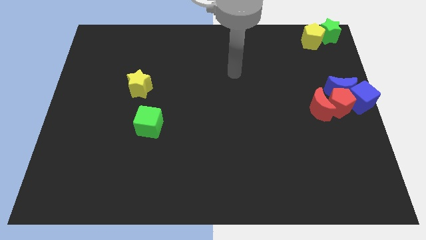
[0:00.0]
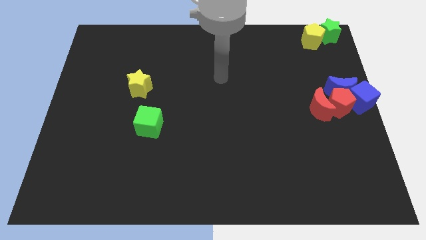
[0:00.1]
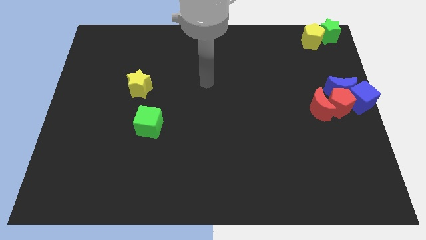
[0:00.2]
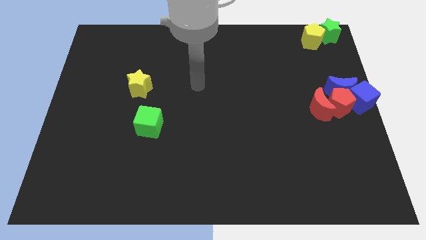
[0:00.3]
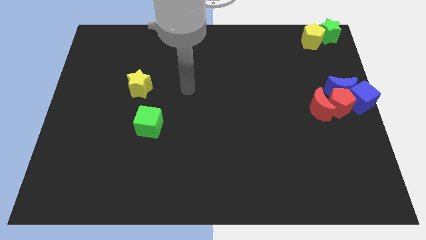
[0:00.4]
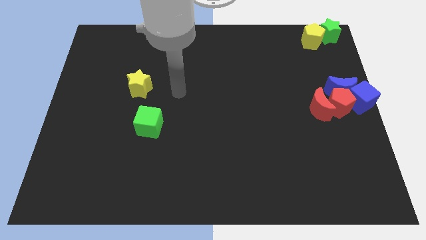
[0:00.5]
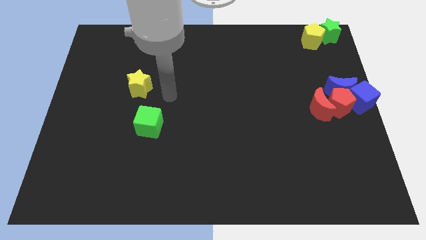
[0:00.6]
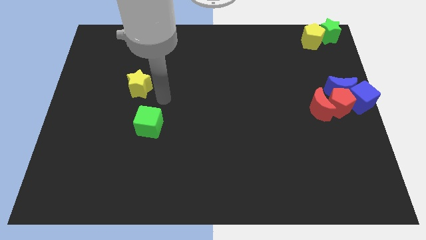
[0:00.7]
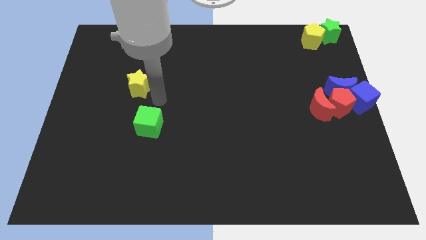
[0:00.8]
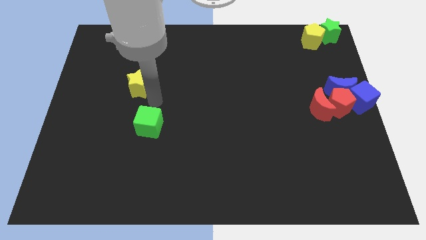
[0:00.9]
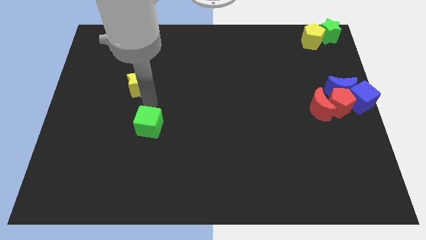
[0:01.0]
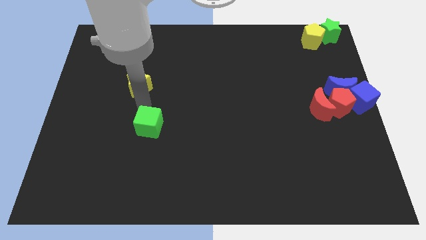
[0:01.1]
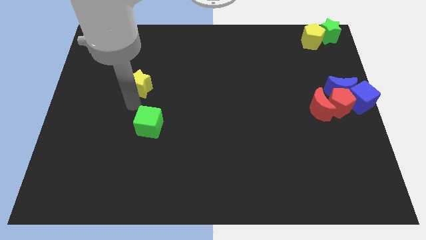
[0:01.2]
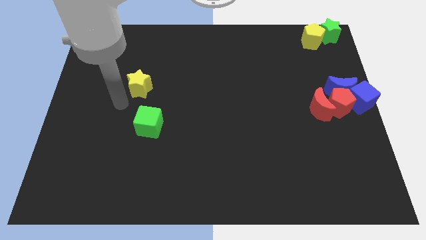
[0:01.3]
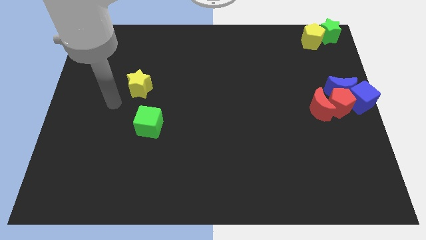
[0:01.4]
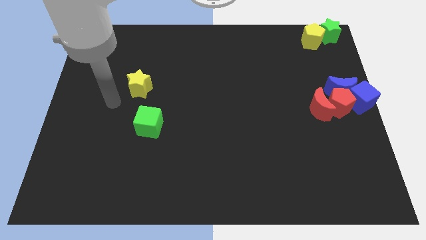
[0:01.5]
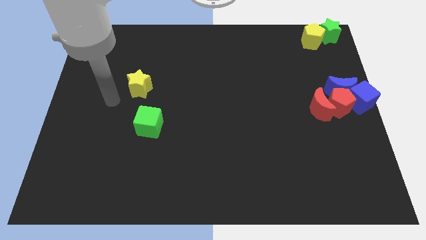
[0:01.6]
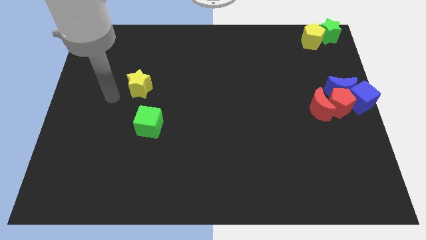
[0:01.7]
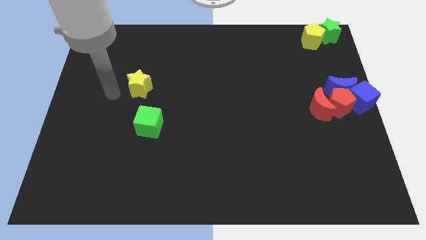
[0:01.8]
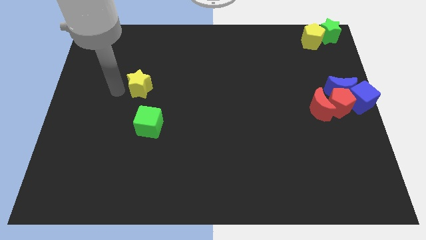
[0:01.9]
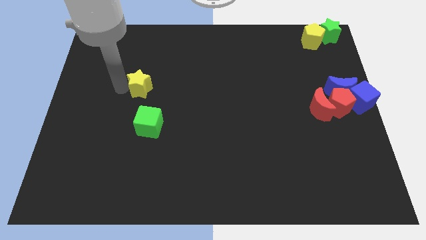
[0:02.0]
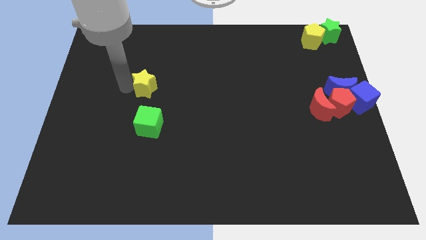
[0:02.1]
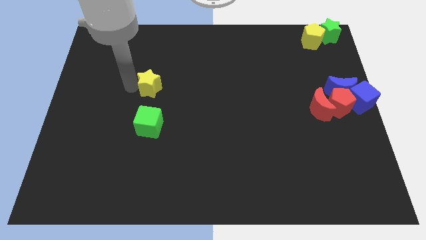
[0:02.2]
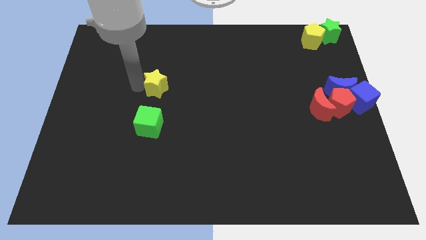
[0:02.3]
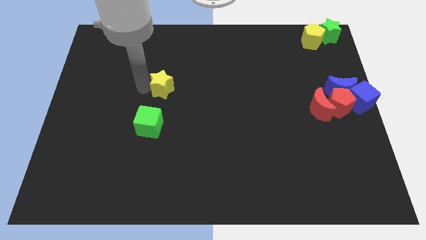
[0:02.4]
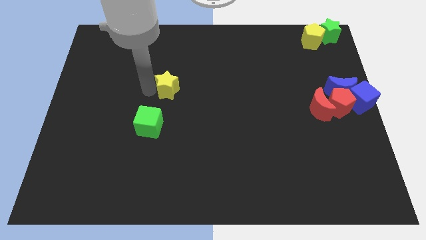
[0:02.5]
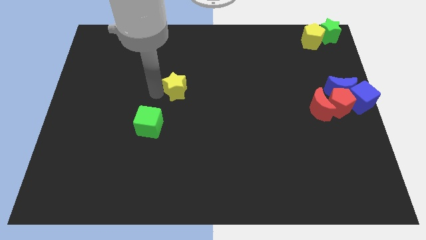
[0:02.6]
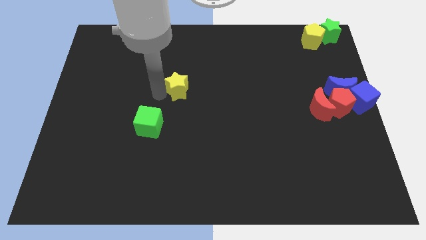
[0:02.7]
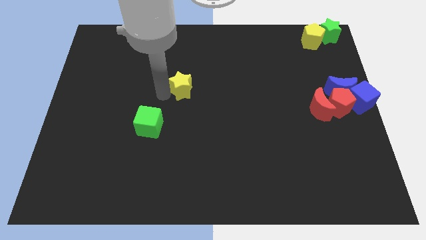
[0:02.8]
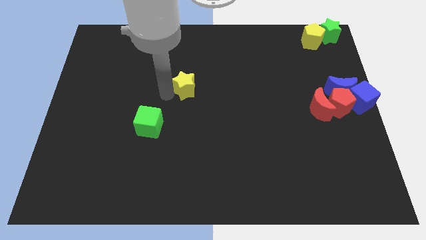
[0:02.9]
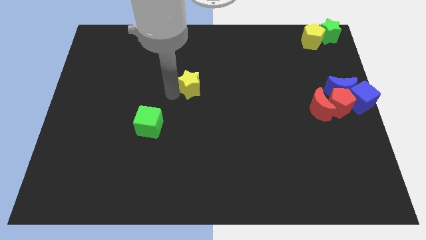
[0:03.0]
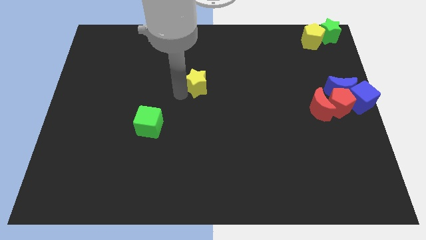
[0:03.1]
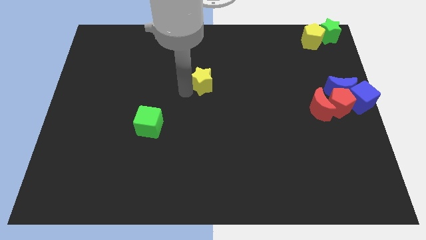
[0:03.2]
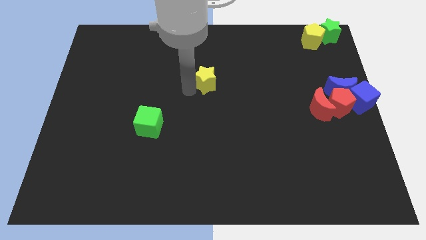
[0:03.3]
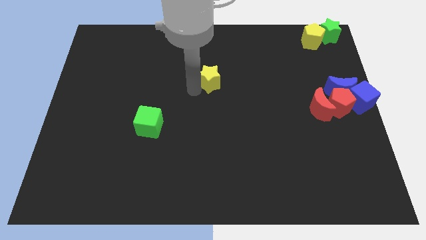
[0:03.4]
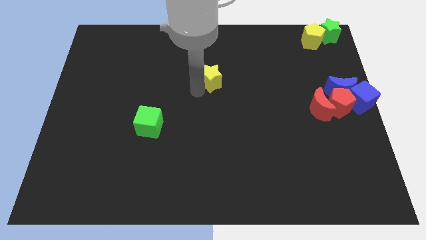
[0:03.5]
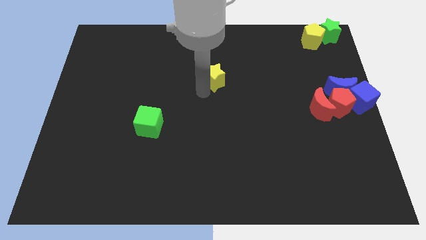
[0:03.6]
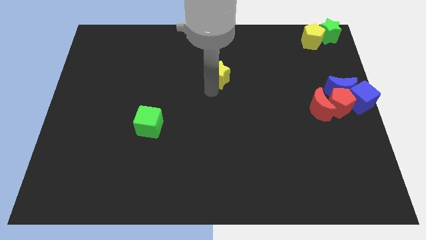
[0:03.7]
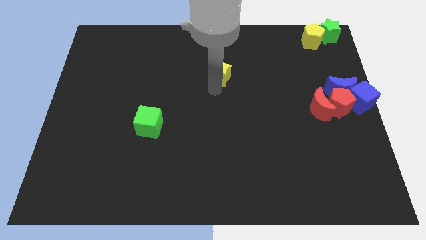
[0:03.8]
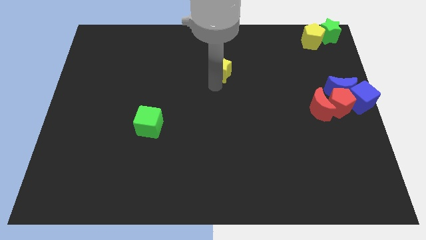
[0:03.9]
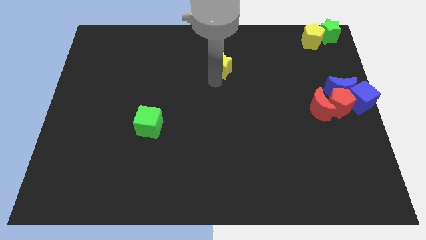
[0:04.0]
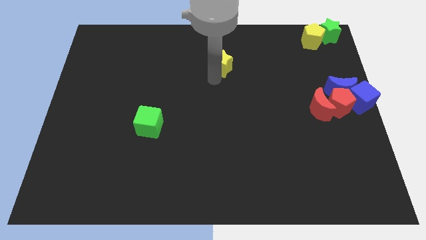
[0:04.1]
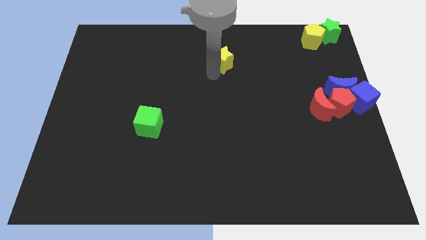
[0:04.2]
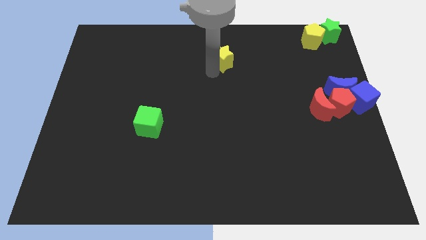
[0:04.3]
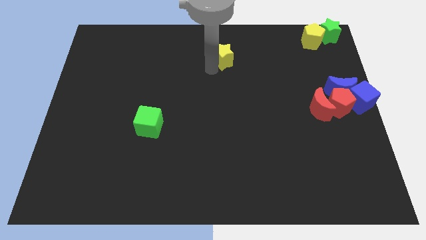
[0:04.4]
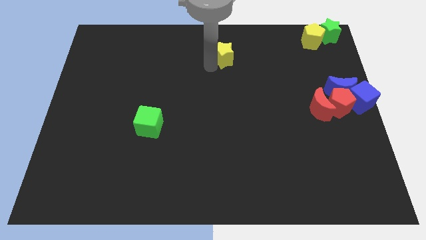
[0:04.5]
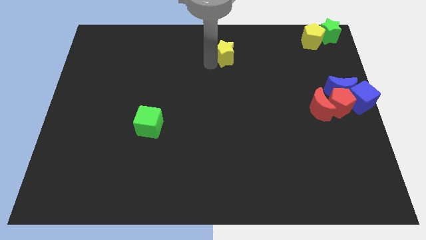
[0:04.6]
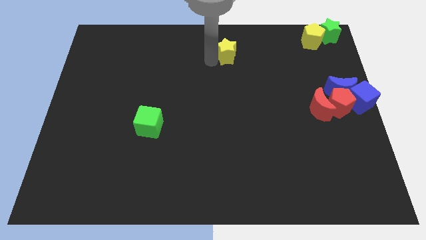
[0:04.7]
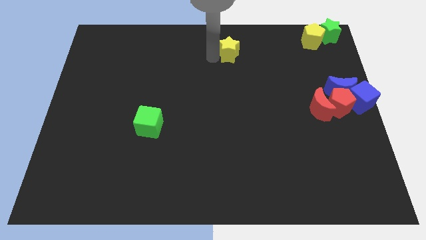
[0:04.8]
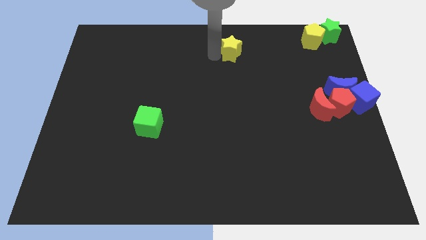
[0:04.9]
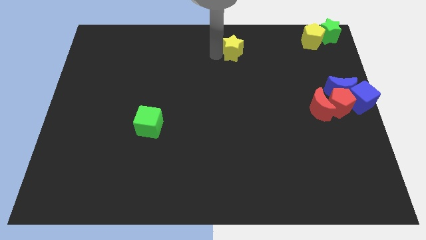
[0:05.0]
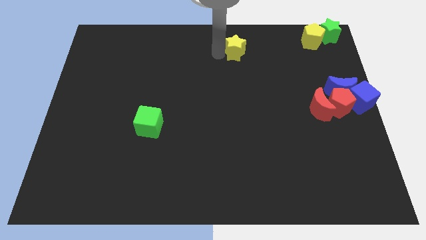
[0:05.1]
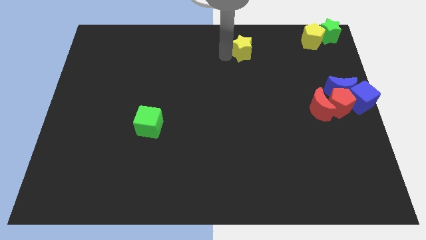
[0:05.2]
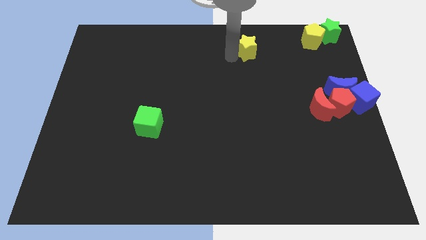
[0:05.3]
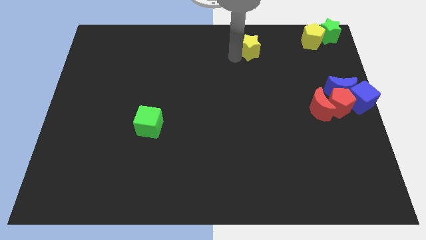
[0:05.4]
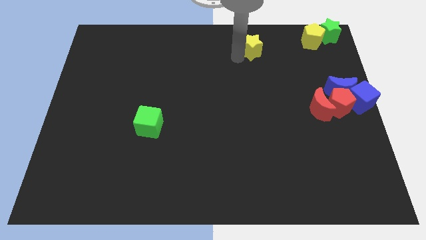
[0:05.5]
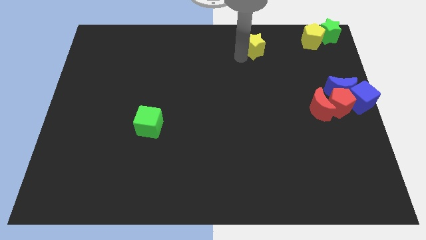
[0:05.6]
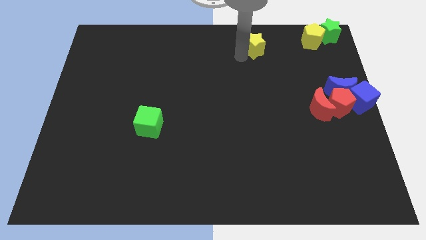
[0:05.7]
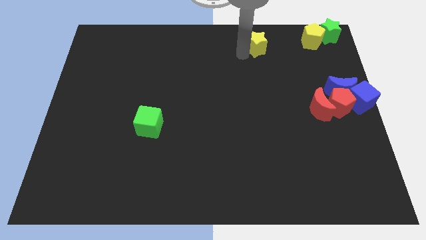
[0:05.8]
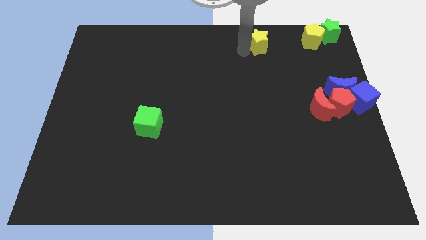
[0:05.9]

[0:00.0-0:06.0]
move the yellow star towards the left of the yellow pentagon

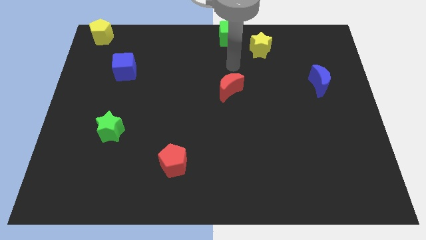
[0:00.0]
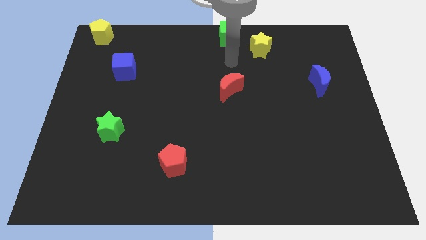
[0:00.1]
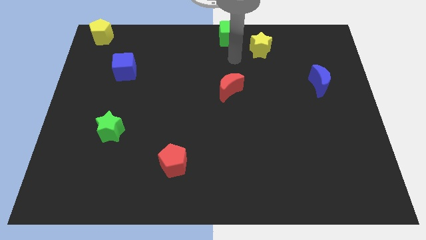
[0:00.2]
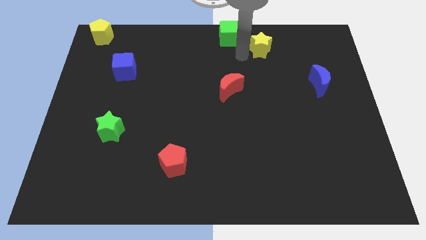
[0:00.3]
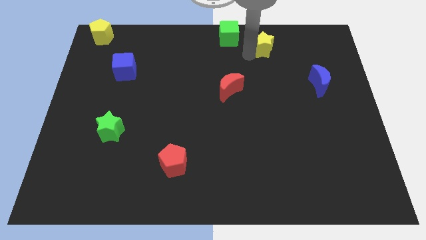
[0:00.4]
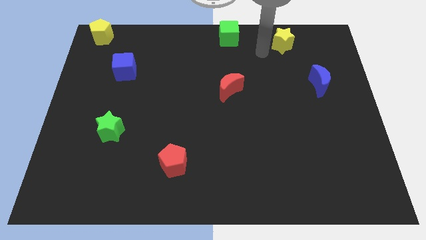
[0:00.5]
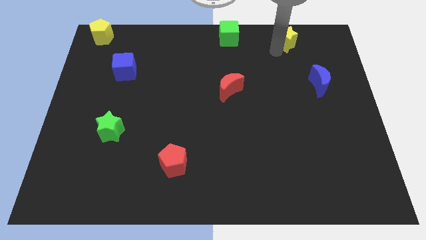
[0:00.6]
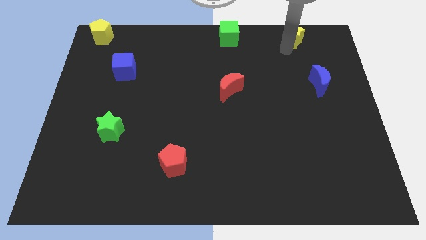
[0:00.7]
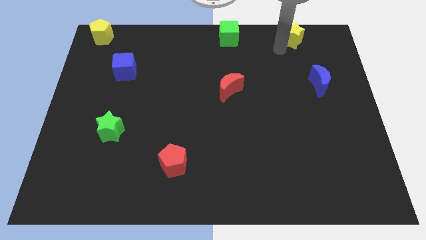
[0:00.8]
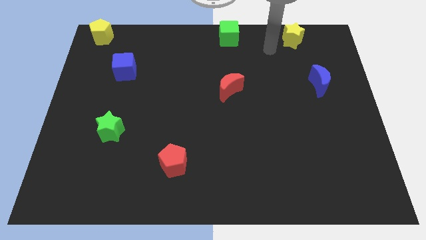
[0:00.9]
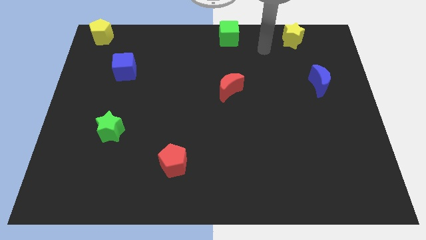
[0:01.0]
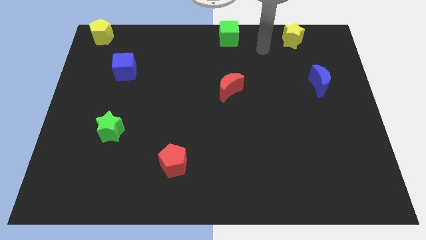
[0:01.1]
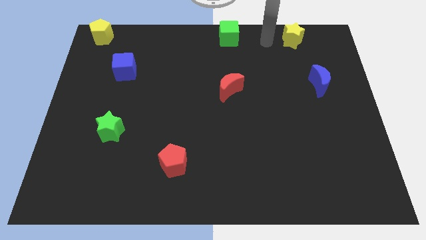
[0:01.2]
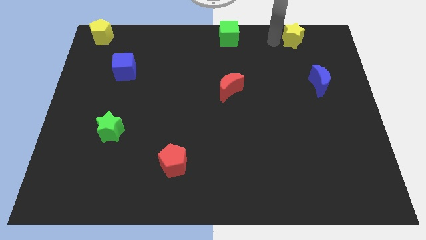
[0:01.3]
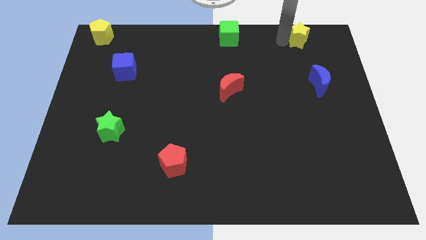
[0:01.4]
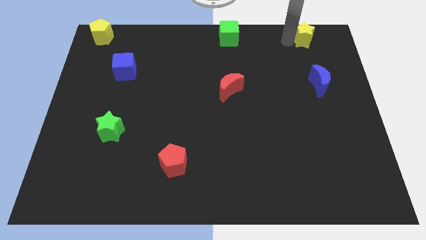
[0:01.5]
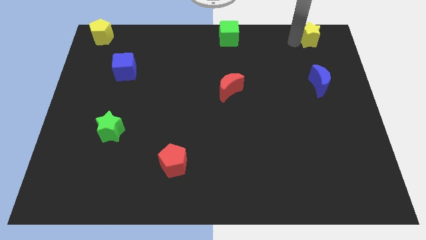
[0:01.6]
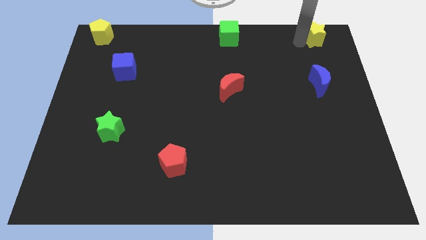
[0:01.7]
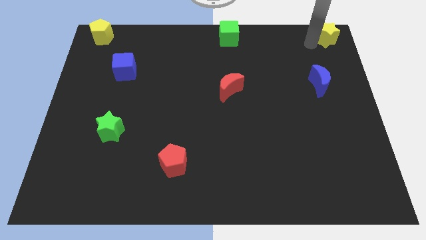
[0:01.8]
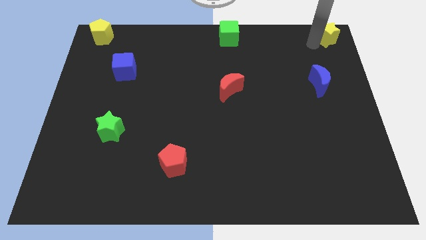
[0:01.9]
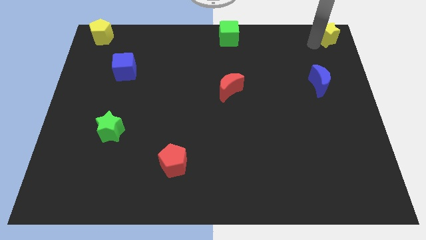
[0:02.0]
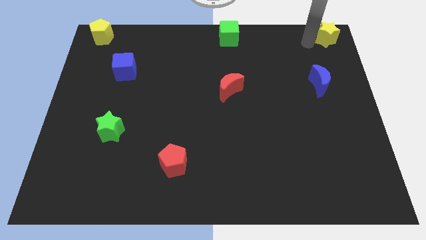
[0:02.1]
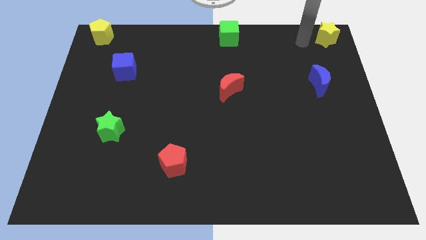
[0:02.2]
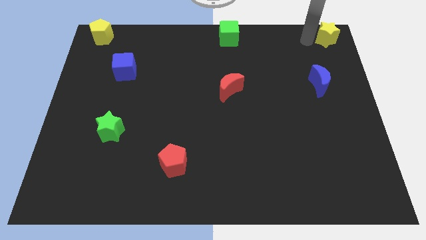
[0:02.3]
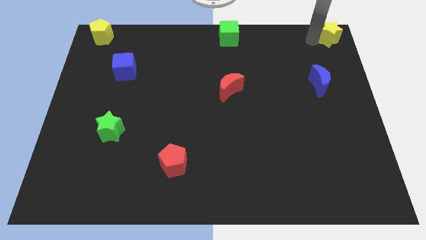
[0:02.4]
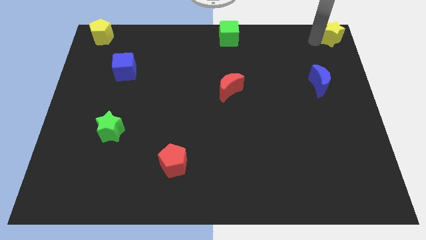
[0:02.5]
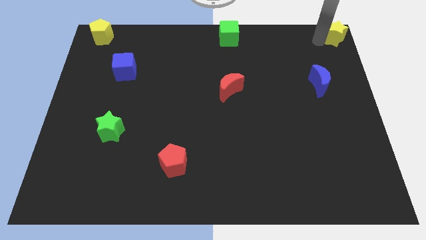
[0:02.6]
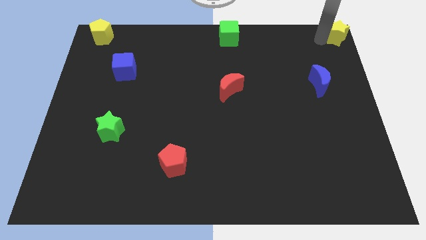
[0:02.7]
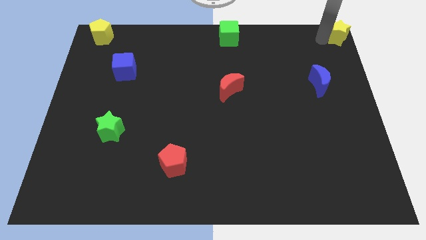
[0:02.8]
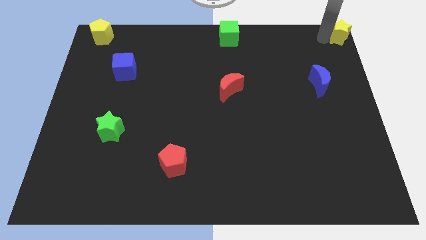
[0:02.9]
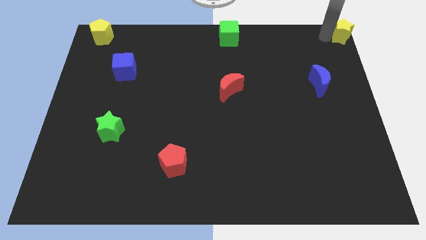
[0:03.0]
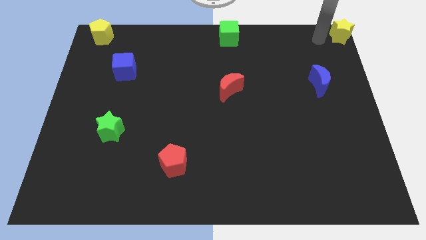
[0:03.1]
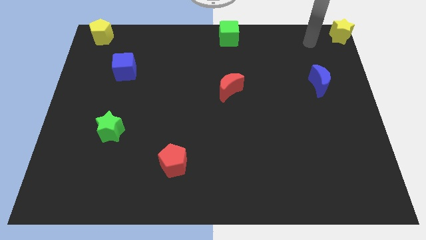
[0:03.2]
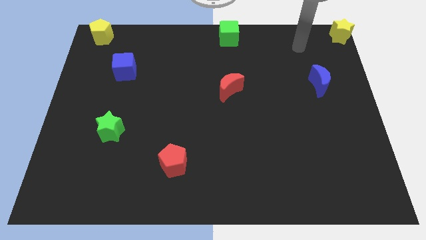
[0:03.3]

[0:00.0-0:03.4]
push the yellow star to the top right corner of the board
